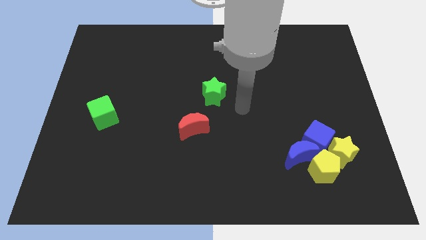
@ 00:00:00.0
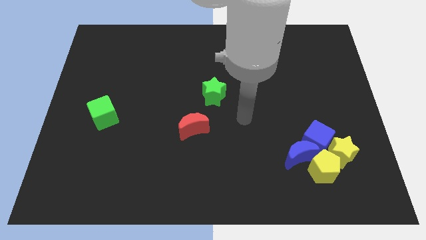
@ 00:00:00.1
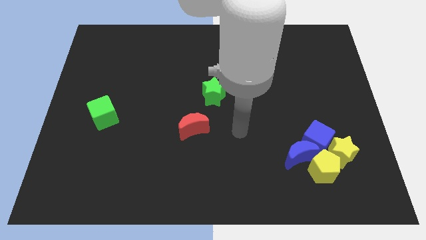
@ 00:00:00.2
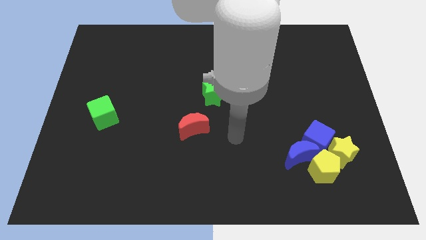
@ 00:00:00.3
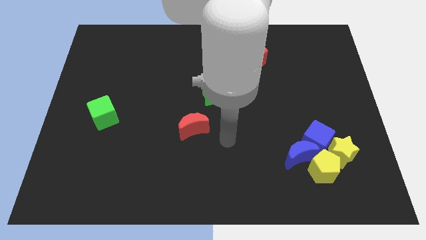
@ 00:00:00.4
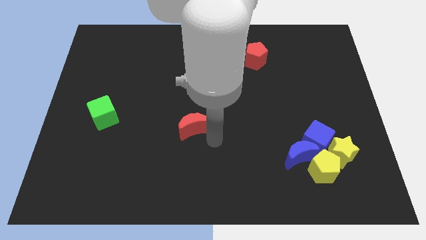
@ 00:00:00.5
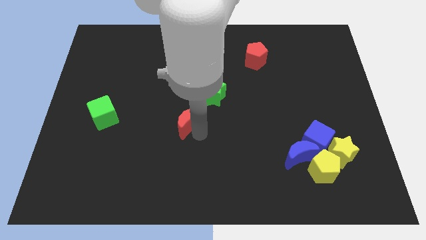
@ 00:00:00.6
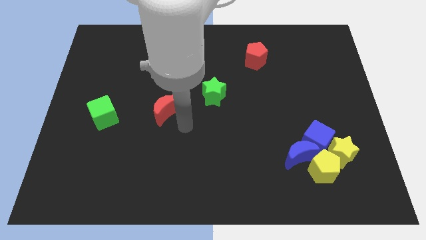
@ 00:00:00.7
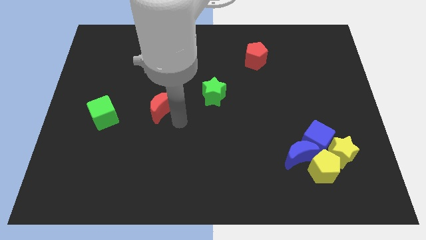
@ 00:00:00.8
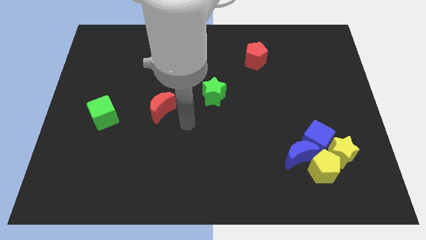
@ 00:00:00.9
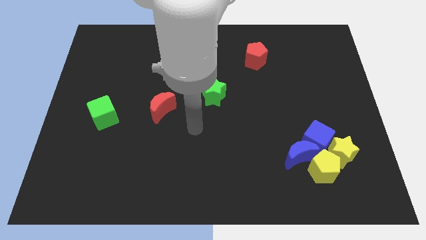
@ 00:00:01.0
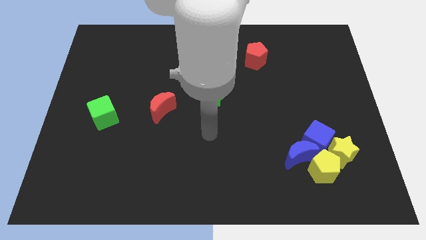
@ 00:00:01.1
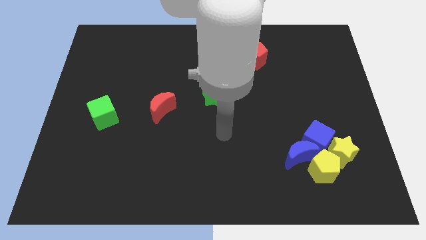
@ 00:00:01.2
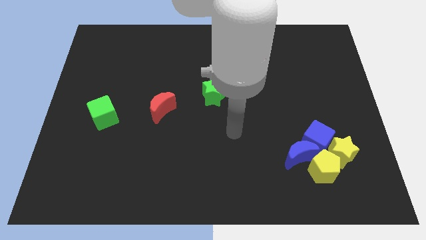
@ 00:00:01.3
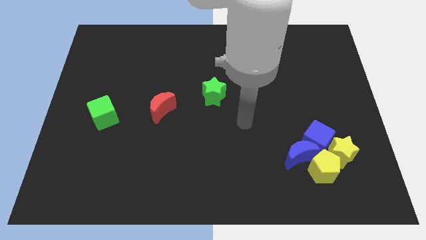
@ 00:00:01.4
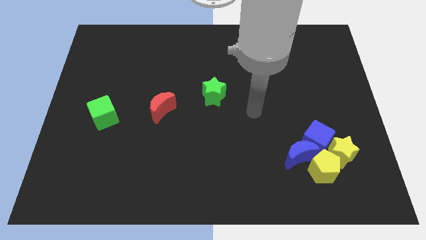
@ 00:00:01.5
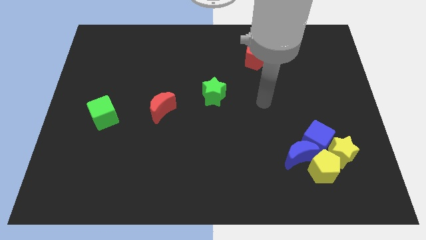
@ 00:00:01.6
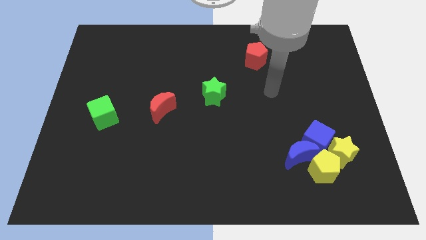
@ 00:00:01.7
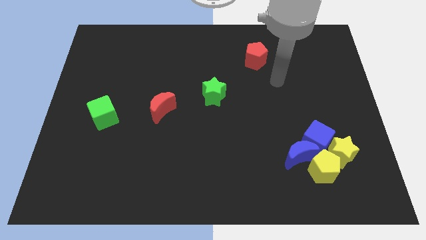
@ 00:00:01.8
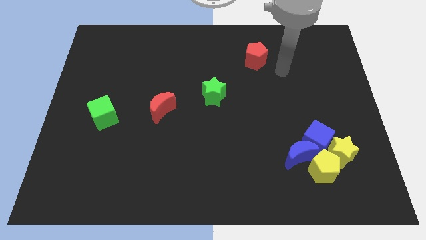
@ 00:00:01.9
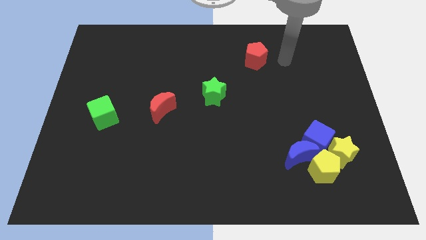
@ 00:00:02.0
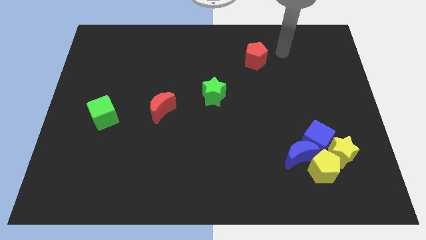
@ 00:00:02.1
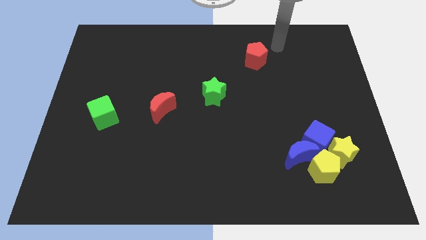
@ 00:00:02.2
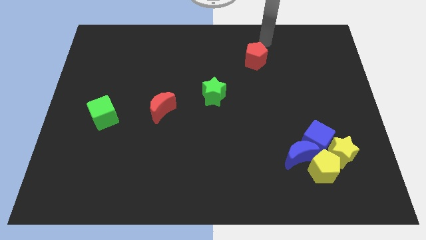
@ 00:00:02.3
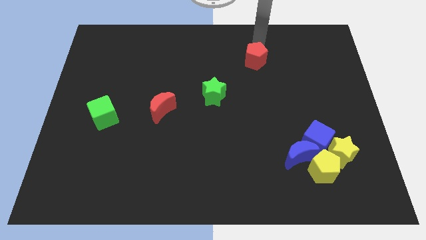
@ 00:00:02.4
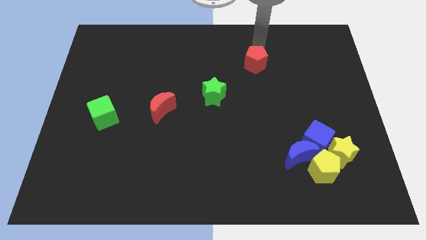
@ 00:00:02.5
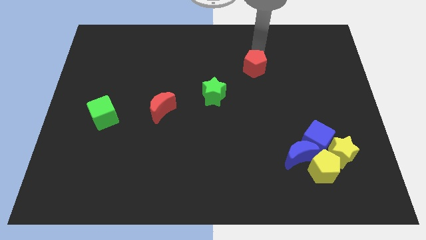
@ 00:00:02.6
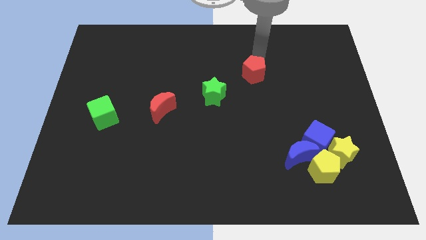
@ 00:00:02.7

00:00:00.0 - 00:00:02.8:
place the red crescent in between green cube and green star

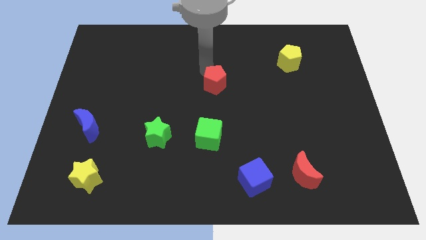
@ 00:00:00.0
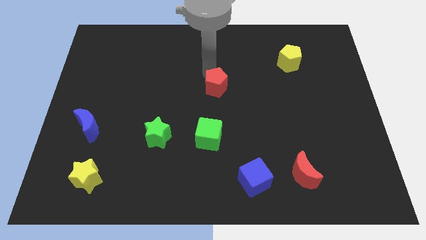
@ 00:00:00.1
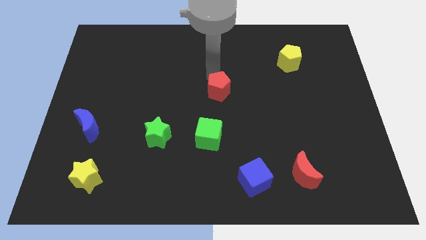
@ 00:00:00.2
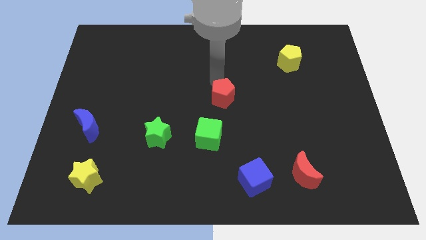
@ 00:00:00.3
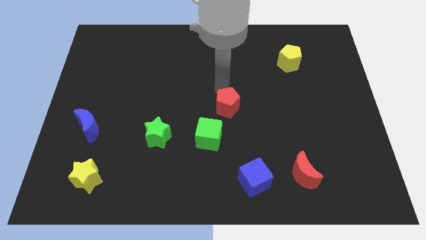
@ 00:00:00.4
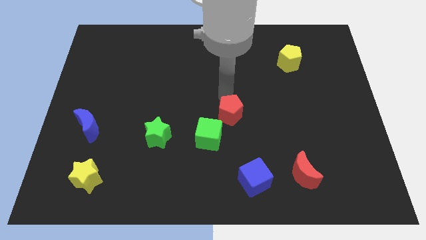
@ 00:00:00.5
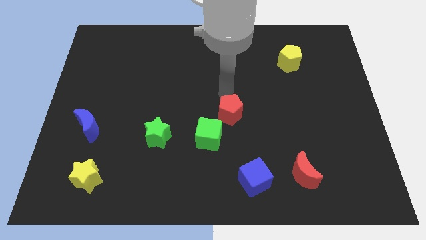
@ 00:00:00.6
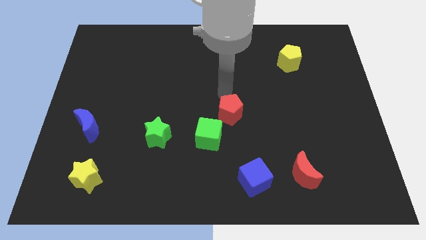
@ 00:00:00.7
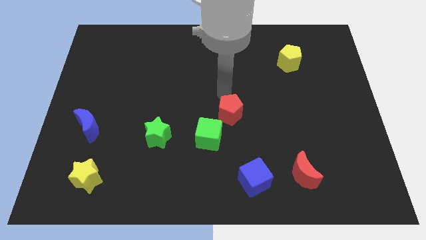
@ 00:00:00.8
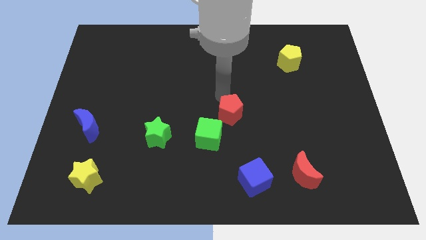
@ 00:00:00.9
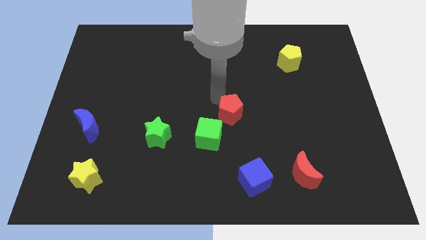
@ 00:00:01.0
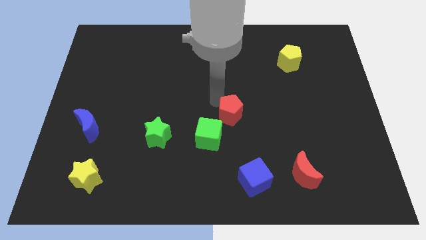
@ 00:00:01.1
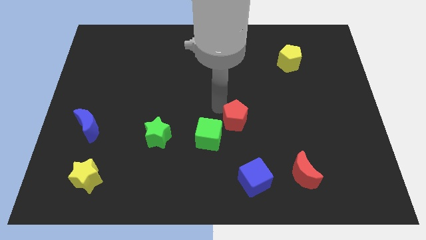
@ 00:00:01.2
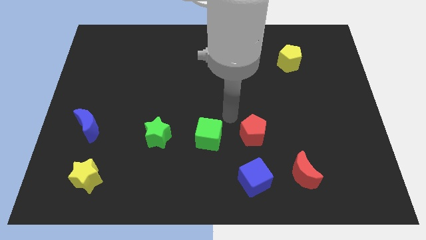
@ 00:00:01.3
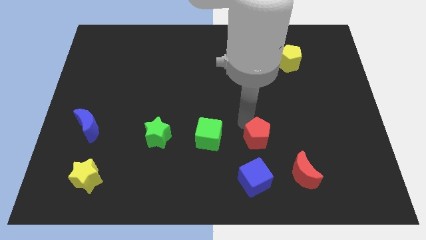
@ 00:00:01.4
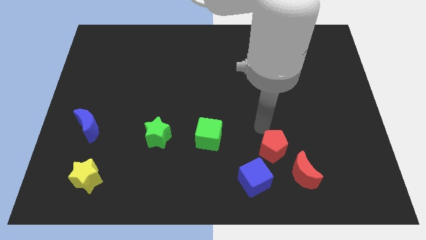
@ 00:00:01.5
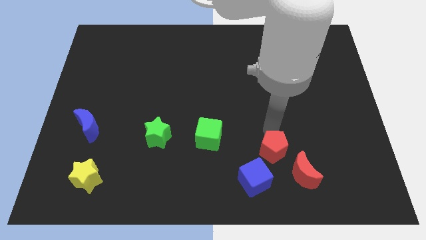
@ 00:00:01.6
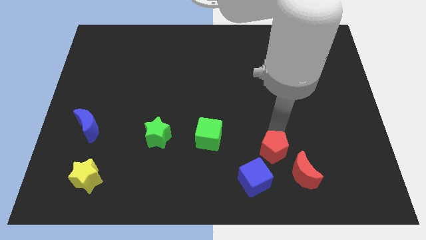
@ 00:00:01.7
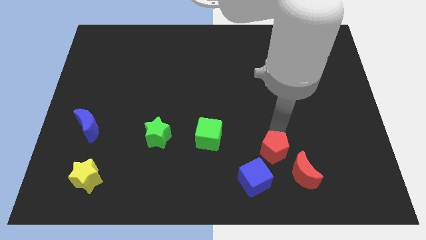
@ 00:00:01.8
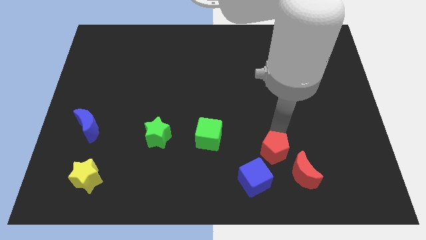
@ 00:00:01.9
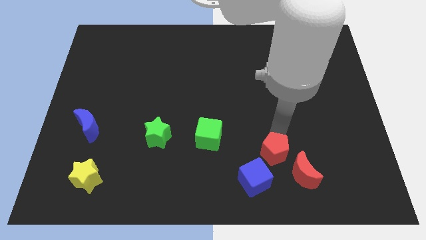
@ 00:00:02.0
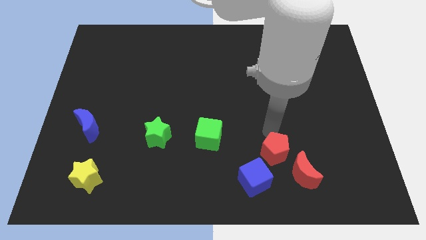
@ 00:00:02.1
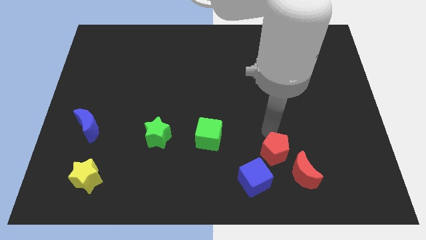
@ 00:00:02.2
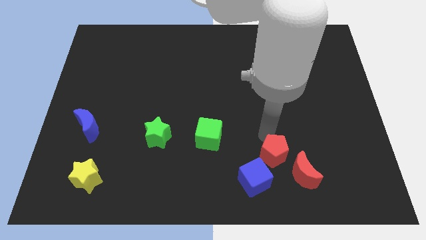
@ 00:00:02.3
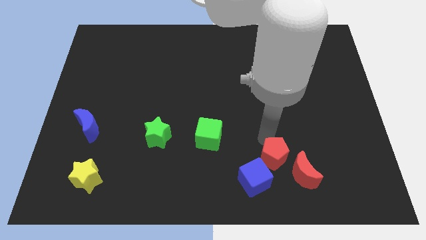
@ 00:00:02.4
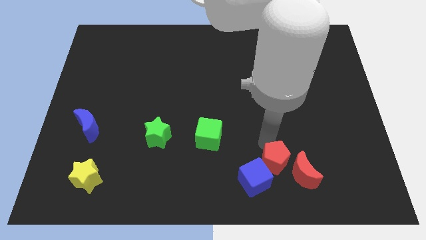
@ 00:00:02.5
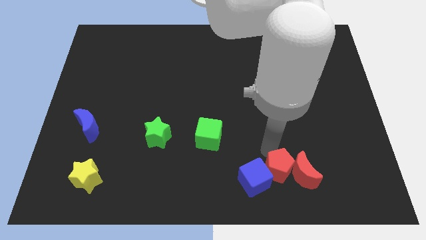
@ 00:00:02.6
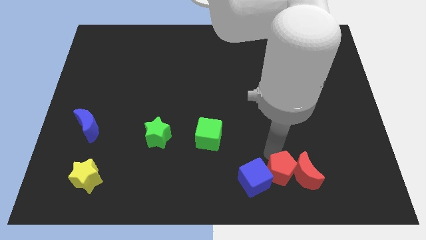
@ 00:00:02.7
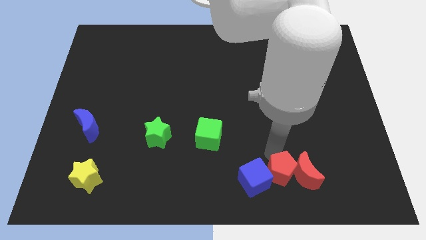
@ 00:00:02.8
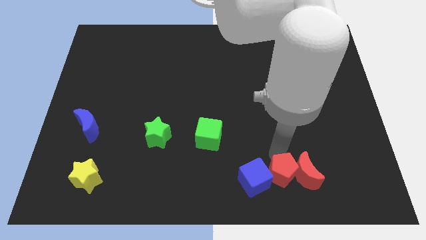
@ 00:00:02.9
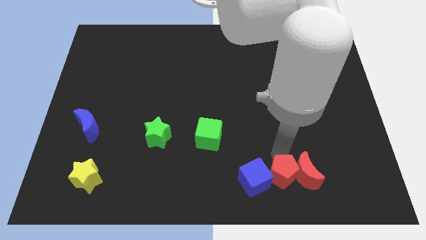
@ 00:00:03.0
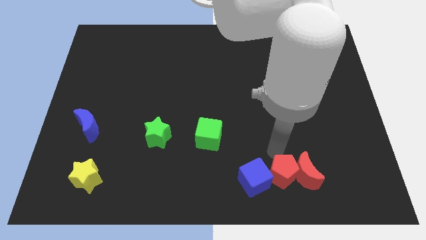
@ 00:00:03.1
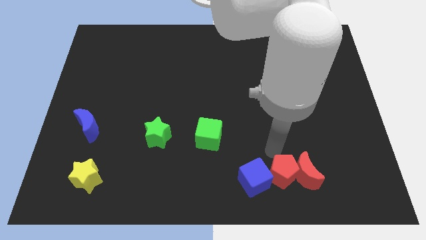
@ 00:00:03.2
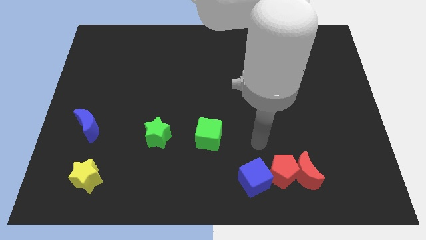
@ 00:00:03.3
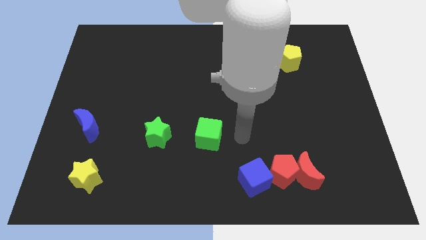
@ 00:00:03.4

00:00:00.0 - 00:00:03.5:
place the red pentagon between blue cube and red moon

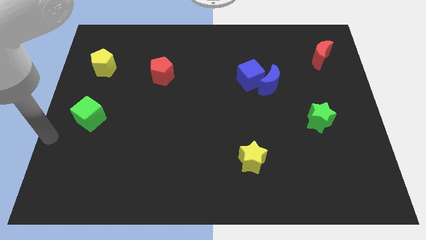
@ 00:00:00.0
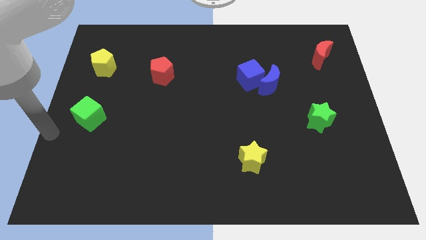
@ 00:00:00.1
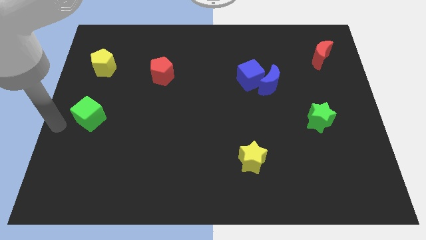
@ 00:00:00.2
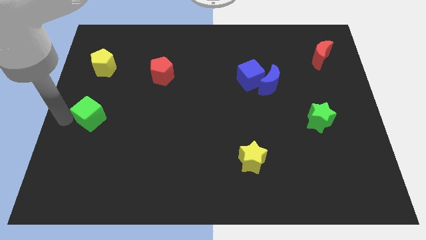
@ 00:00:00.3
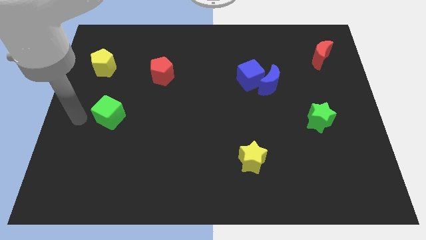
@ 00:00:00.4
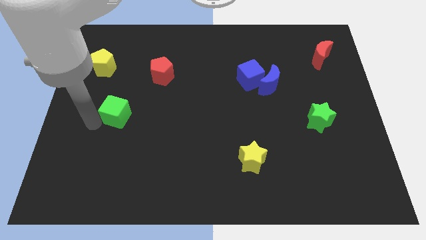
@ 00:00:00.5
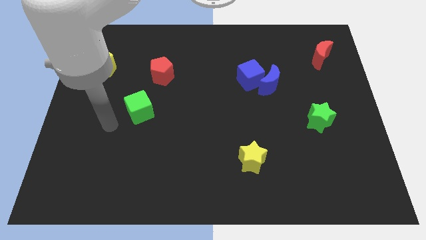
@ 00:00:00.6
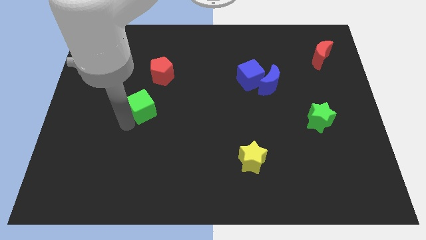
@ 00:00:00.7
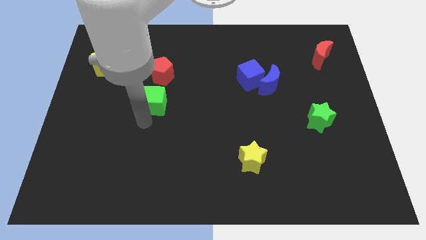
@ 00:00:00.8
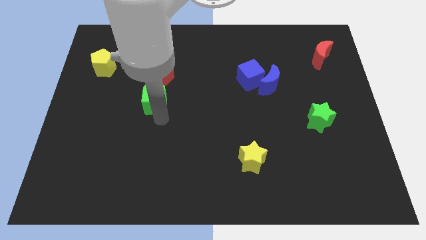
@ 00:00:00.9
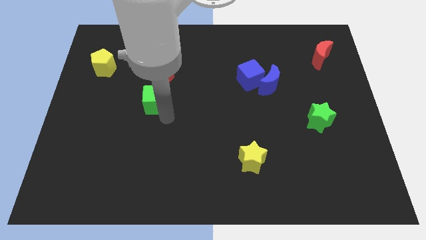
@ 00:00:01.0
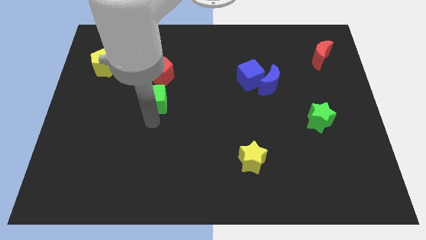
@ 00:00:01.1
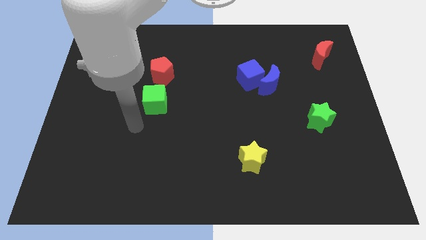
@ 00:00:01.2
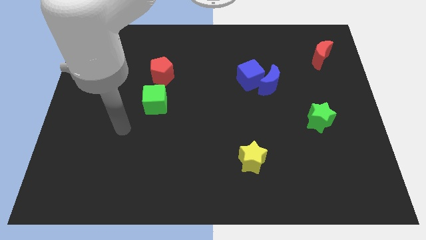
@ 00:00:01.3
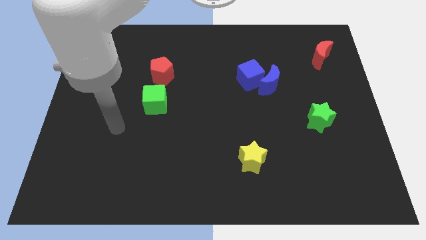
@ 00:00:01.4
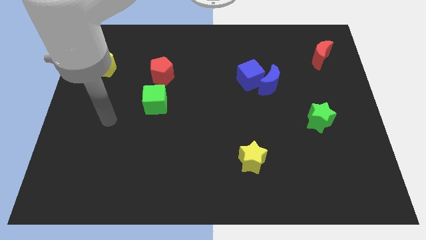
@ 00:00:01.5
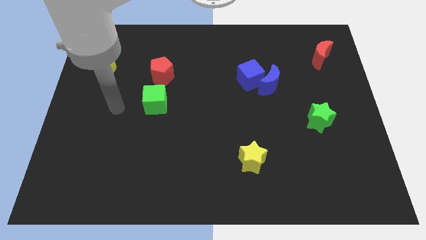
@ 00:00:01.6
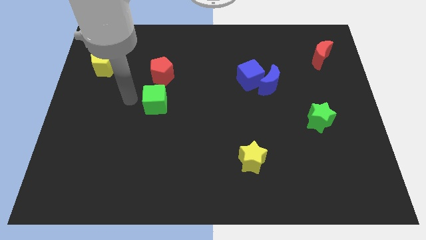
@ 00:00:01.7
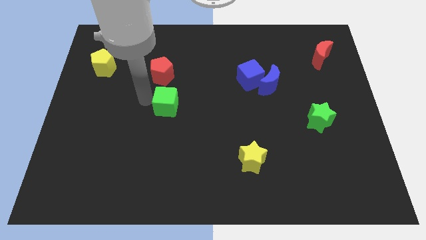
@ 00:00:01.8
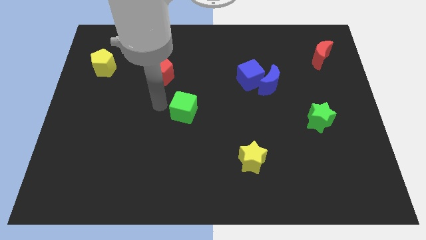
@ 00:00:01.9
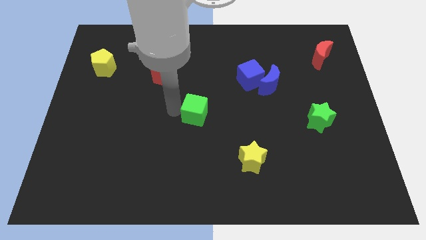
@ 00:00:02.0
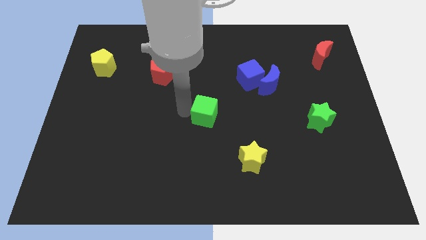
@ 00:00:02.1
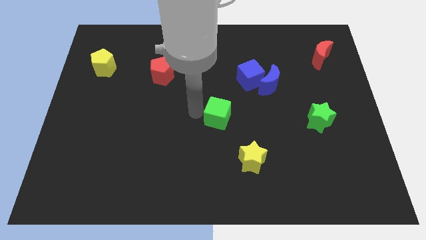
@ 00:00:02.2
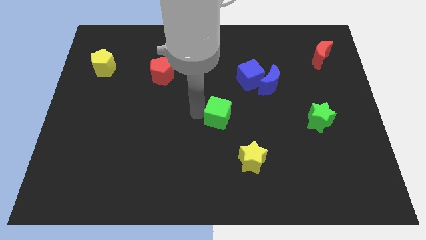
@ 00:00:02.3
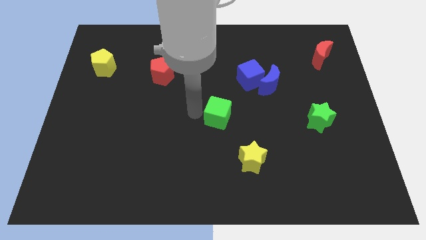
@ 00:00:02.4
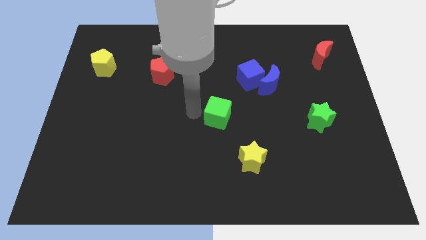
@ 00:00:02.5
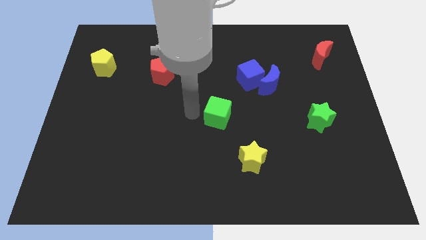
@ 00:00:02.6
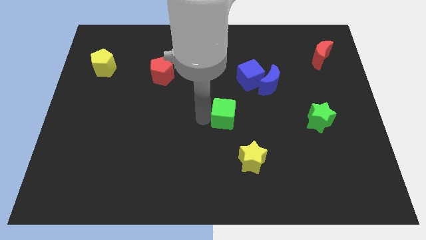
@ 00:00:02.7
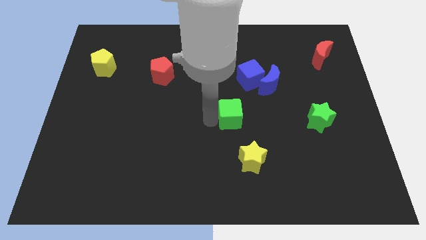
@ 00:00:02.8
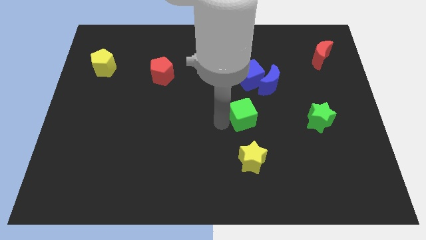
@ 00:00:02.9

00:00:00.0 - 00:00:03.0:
move the green cube below the blue blocks
